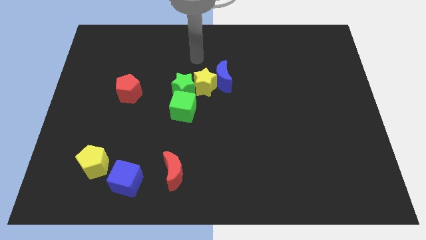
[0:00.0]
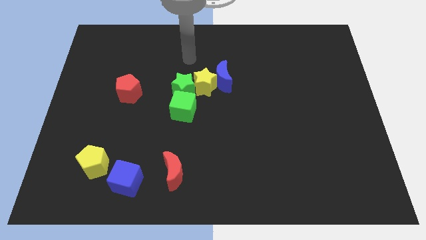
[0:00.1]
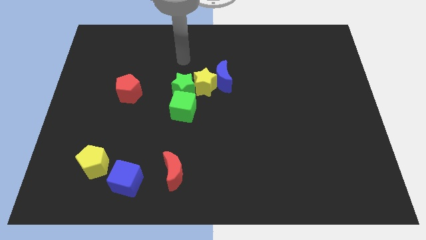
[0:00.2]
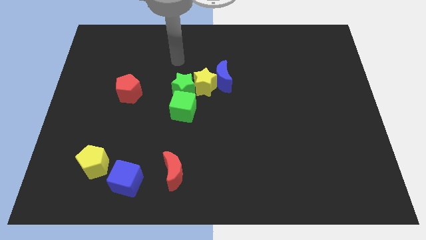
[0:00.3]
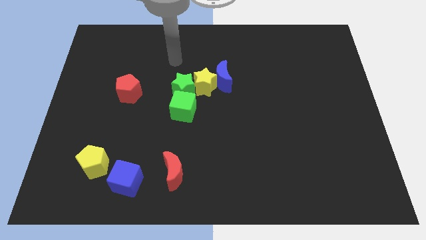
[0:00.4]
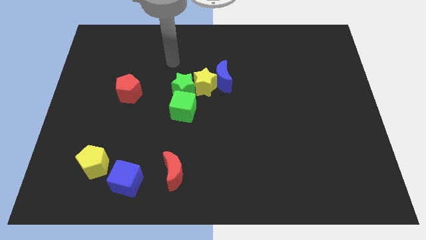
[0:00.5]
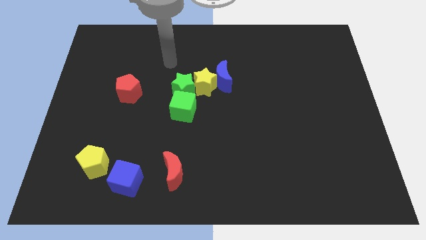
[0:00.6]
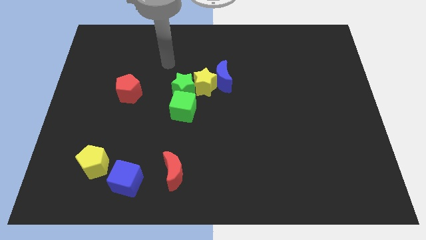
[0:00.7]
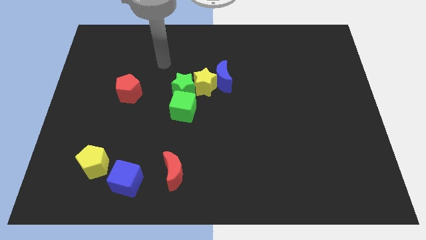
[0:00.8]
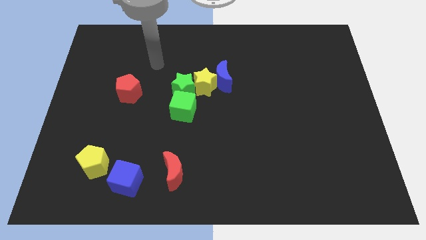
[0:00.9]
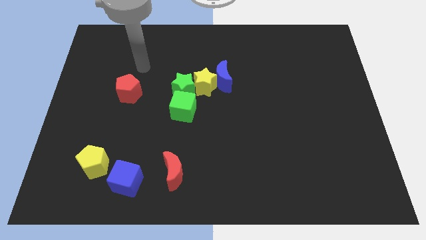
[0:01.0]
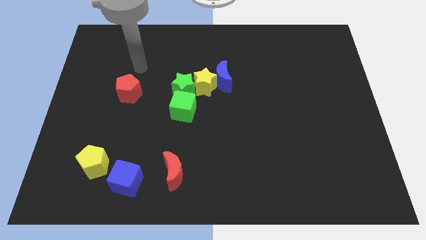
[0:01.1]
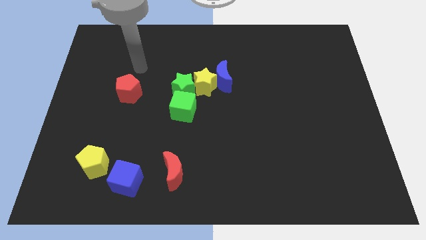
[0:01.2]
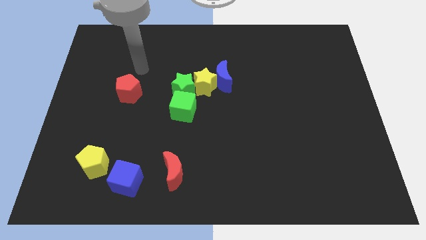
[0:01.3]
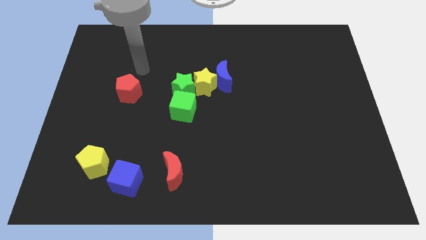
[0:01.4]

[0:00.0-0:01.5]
move your arm to the top of the red pentagon

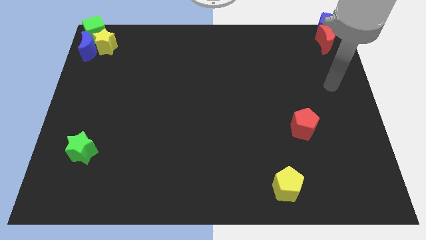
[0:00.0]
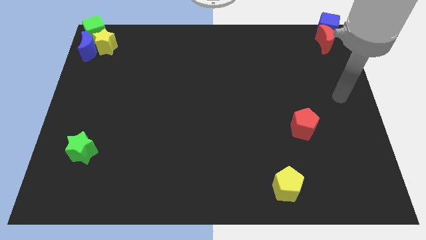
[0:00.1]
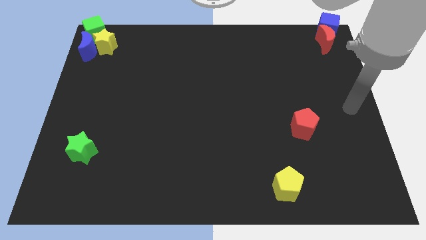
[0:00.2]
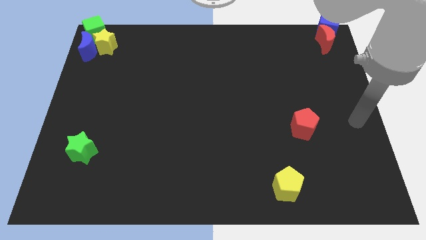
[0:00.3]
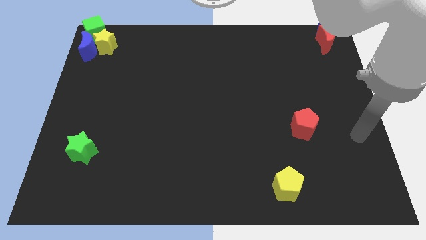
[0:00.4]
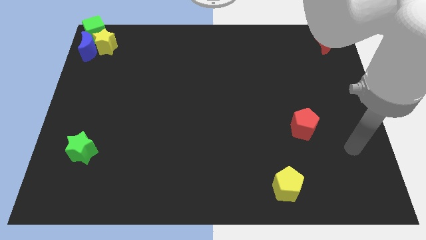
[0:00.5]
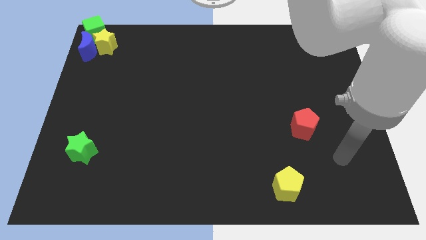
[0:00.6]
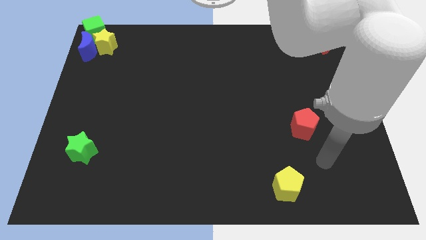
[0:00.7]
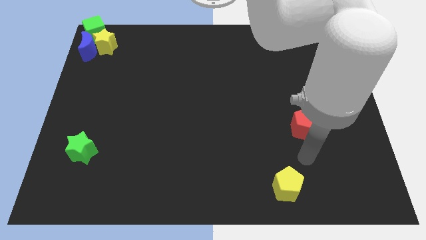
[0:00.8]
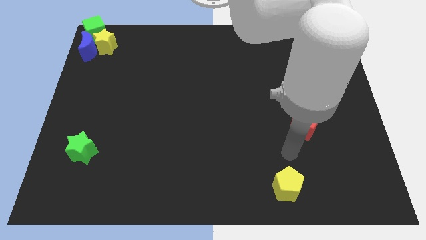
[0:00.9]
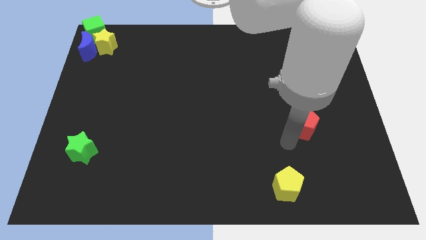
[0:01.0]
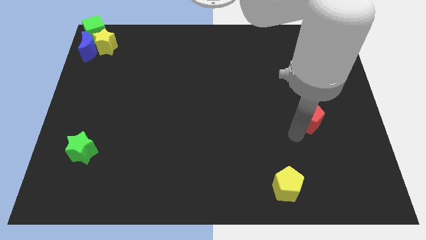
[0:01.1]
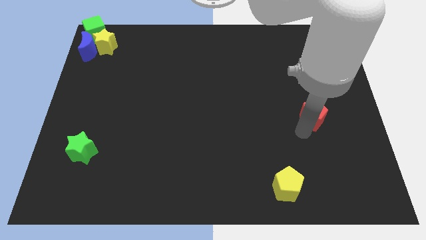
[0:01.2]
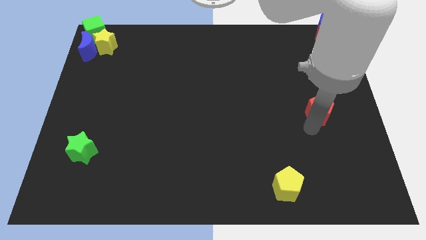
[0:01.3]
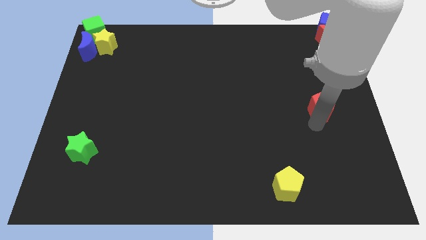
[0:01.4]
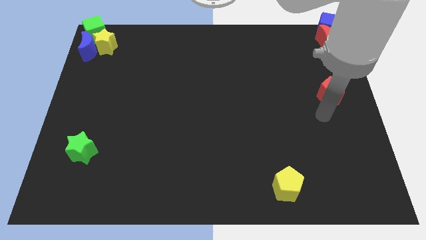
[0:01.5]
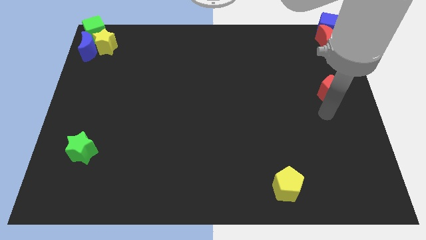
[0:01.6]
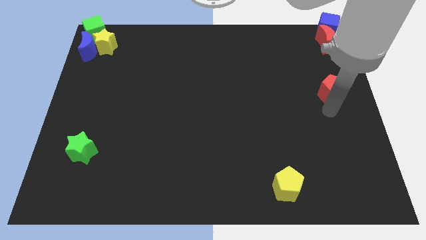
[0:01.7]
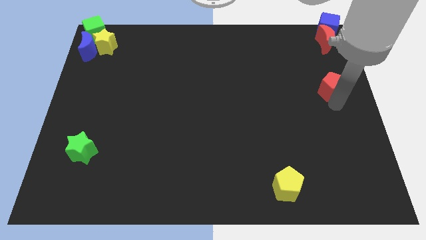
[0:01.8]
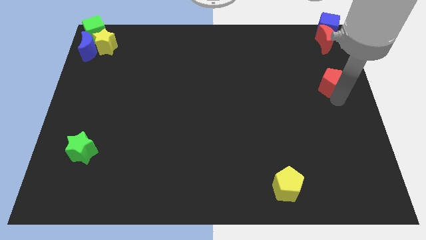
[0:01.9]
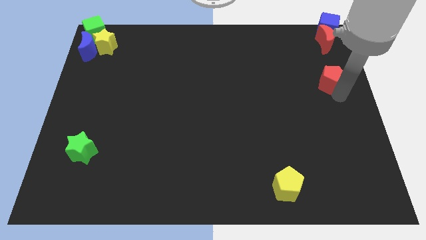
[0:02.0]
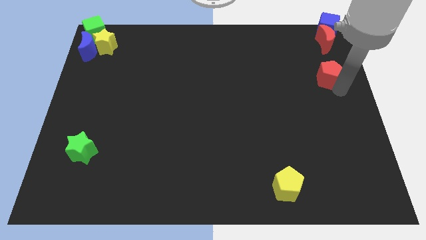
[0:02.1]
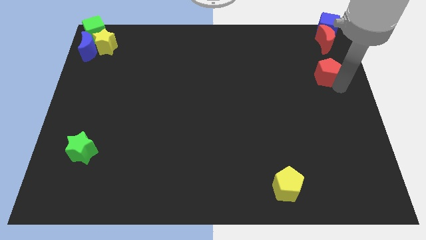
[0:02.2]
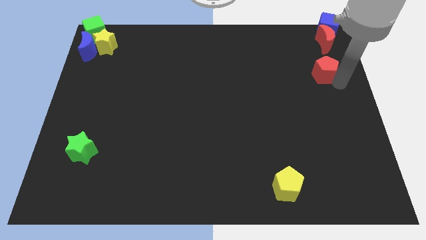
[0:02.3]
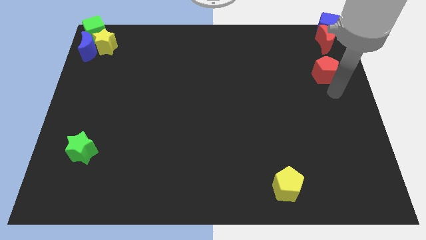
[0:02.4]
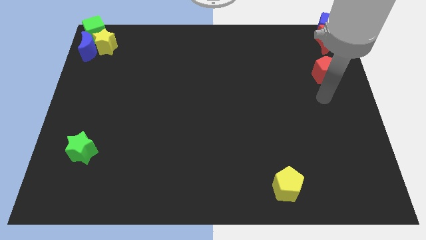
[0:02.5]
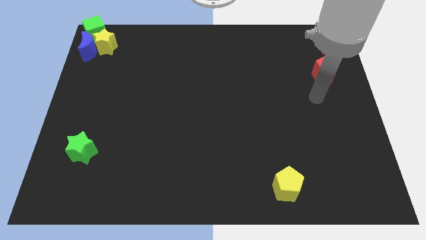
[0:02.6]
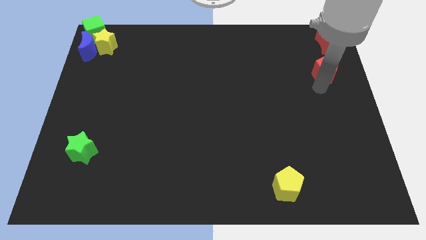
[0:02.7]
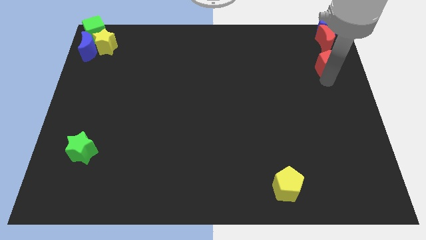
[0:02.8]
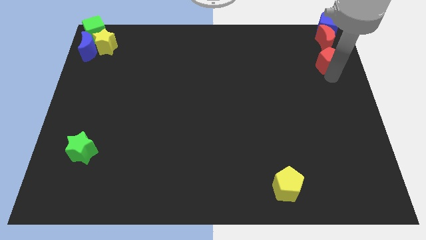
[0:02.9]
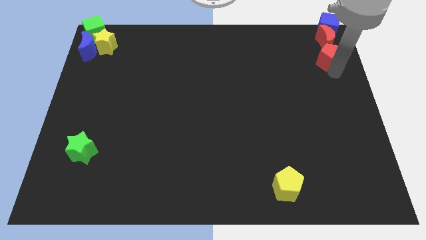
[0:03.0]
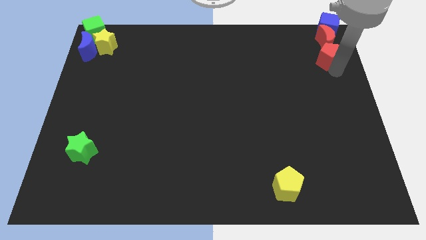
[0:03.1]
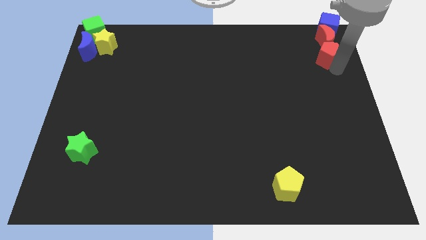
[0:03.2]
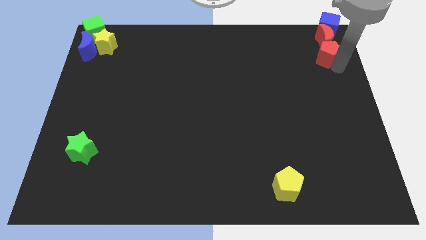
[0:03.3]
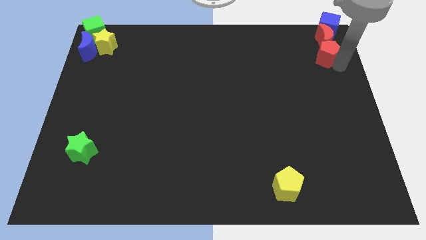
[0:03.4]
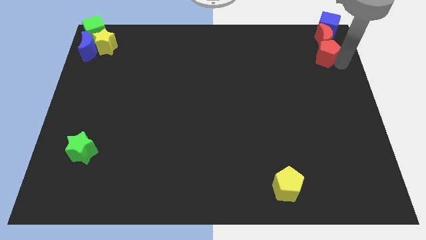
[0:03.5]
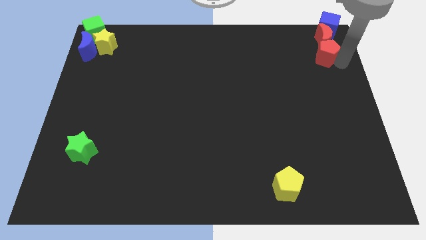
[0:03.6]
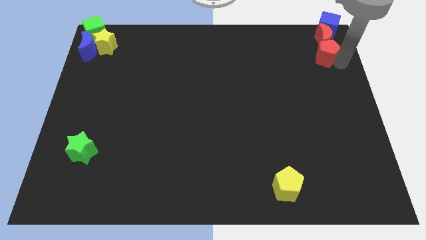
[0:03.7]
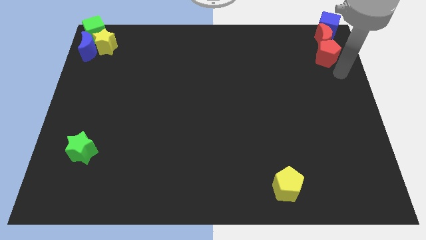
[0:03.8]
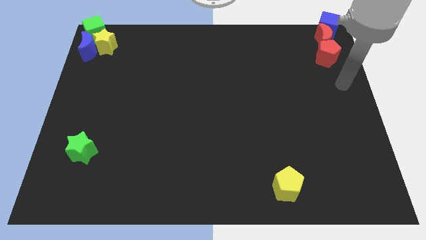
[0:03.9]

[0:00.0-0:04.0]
push the red crescent to the bottom of the red crescent

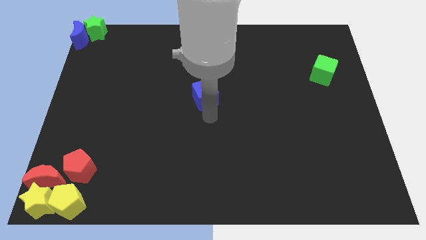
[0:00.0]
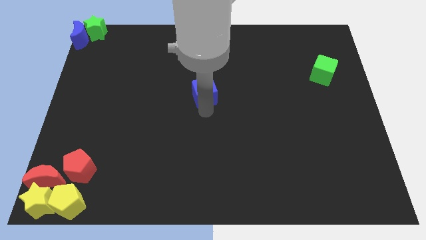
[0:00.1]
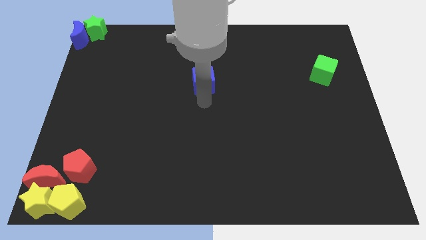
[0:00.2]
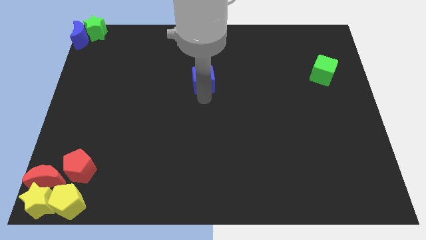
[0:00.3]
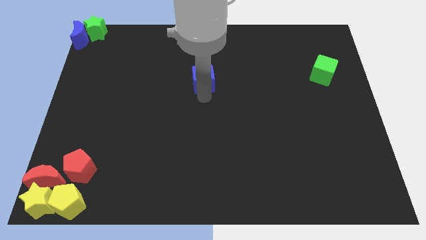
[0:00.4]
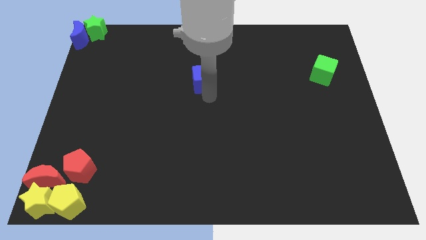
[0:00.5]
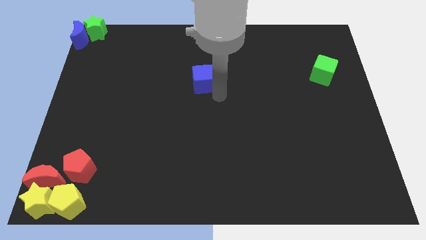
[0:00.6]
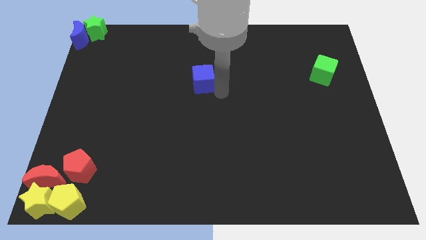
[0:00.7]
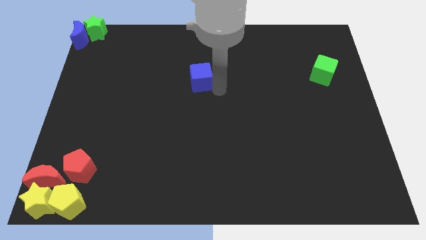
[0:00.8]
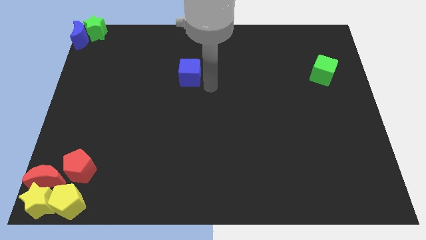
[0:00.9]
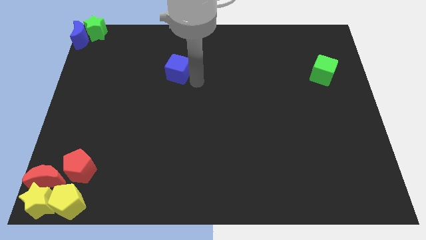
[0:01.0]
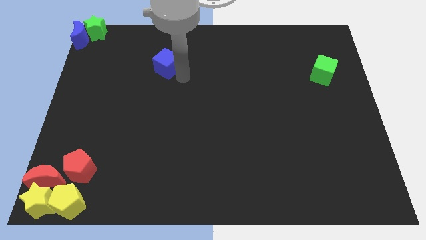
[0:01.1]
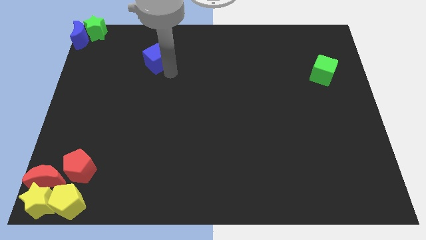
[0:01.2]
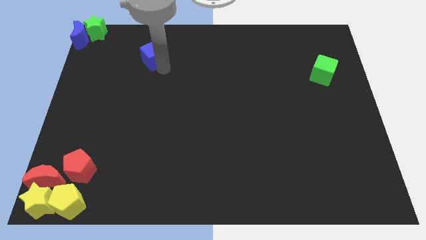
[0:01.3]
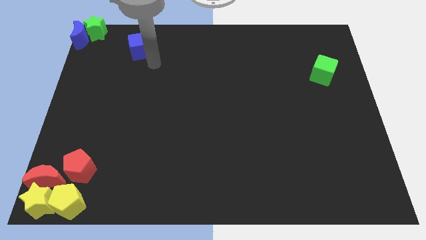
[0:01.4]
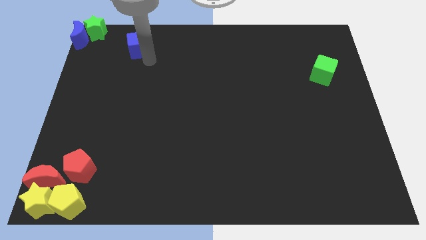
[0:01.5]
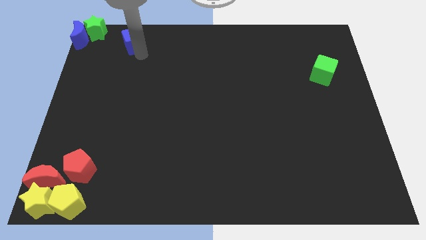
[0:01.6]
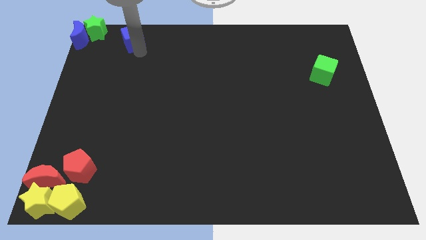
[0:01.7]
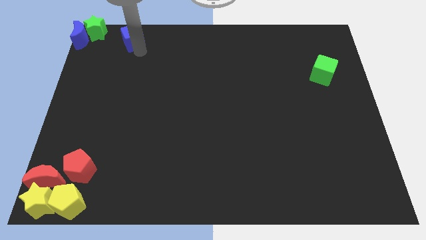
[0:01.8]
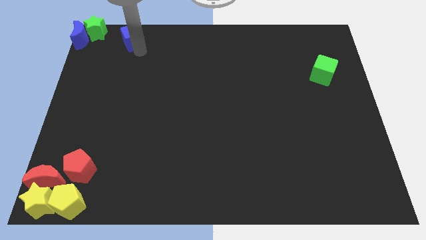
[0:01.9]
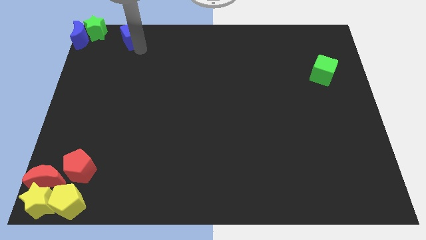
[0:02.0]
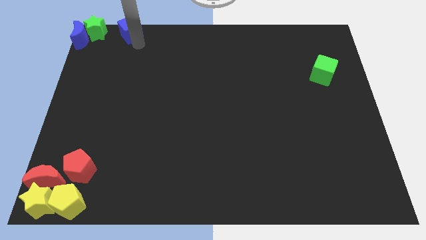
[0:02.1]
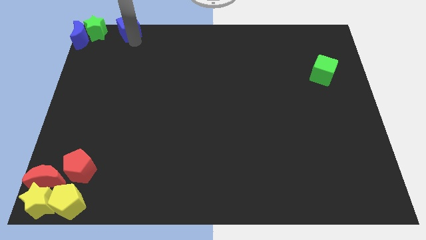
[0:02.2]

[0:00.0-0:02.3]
move the blue cube parallel to the green star

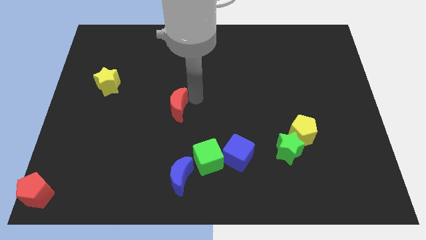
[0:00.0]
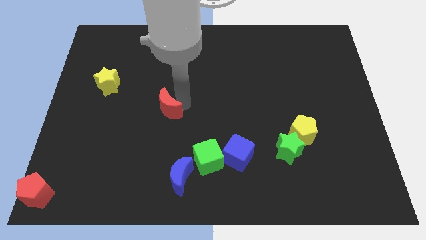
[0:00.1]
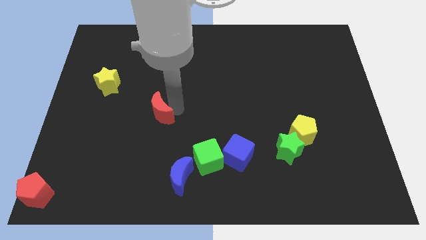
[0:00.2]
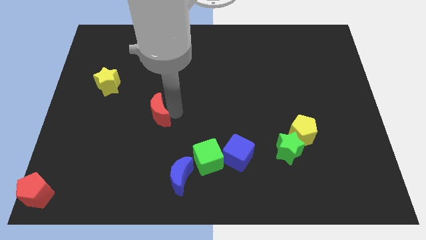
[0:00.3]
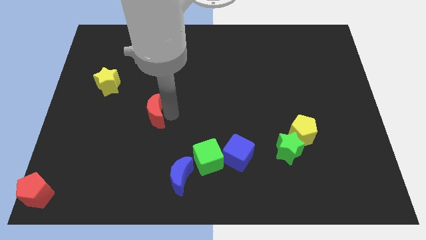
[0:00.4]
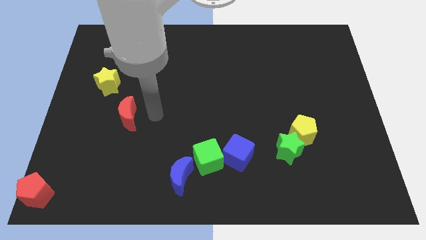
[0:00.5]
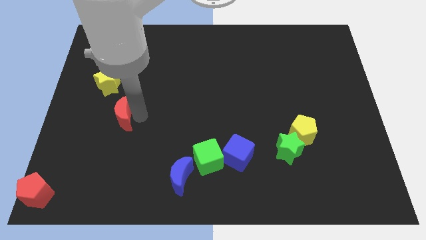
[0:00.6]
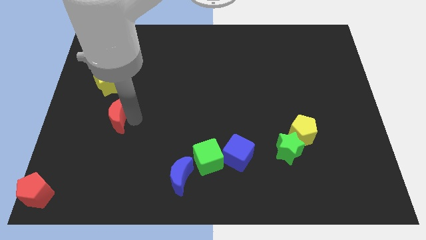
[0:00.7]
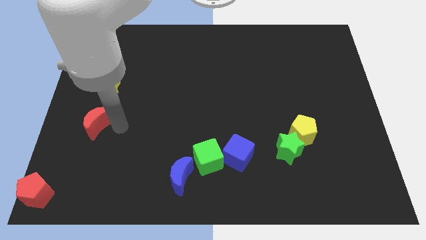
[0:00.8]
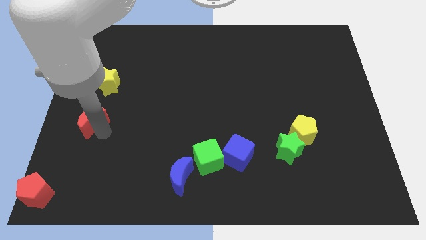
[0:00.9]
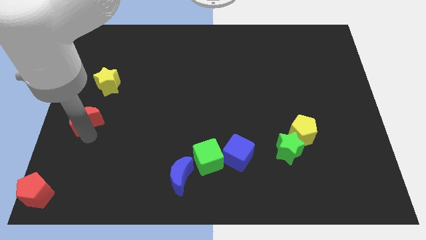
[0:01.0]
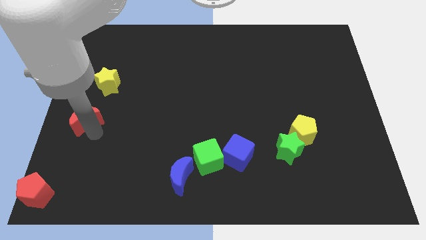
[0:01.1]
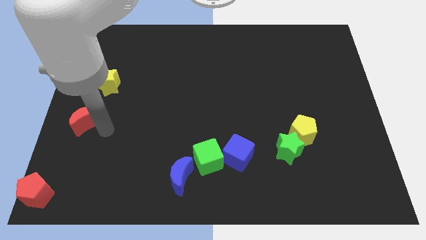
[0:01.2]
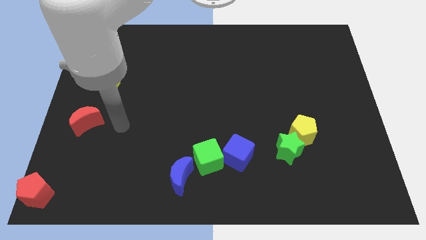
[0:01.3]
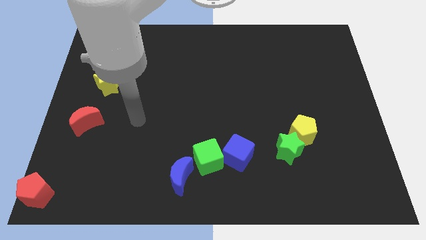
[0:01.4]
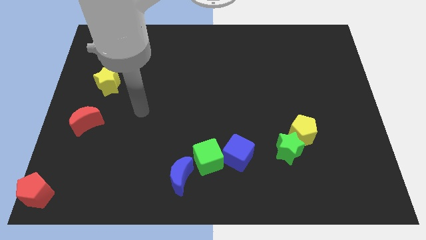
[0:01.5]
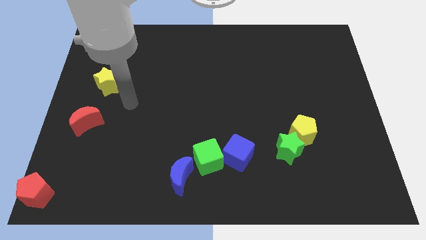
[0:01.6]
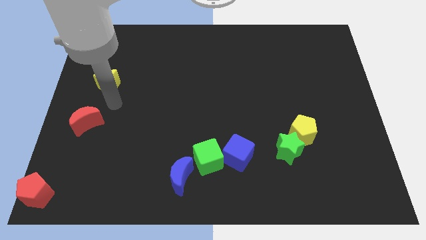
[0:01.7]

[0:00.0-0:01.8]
place the red crescent below to the yellow star
